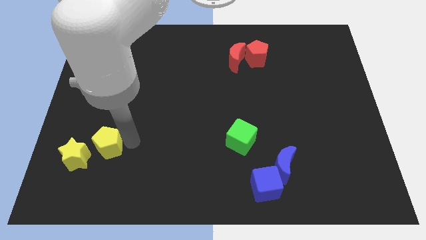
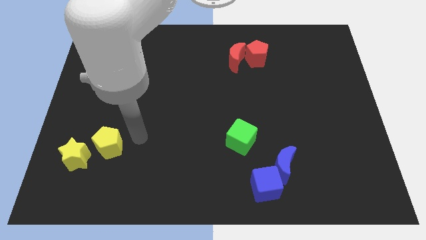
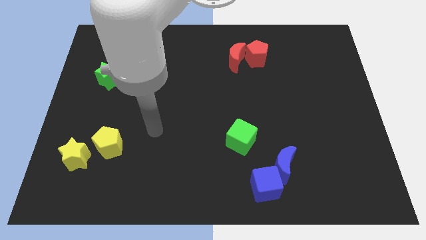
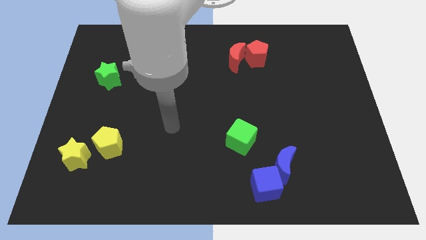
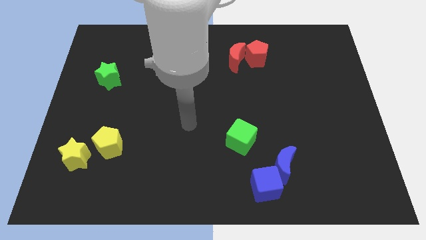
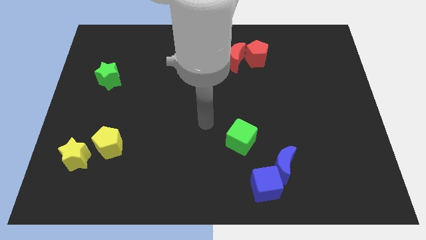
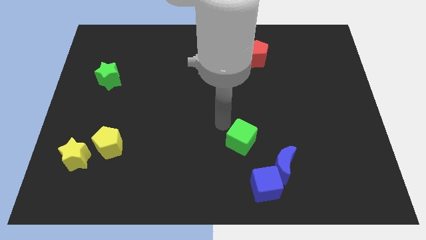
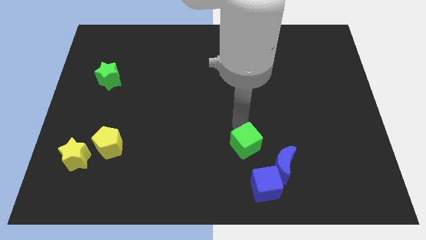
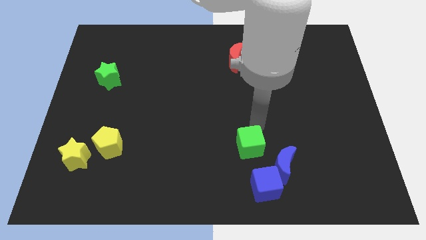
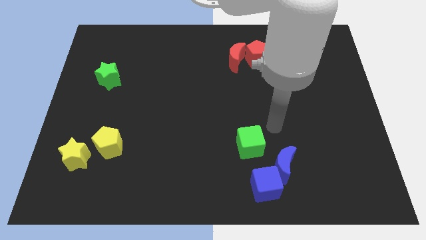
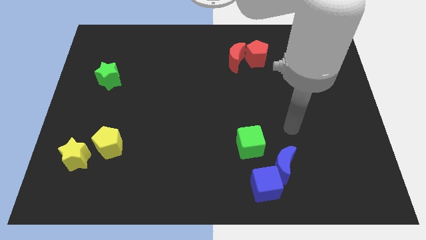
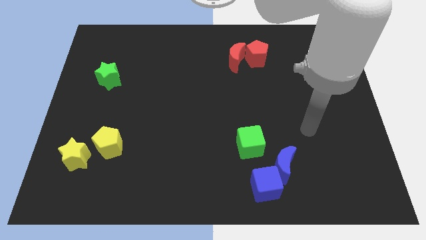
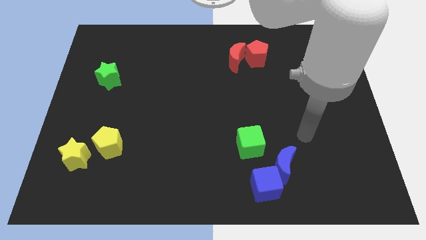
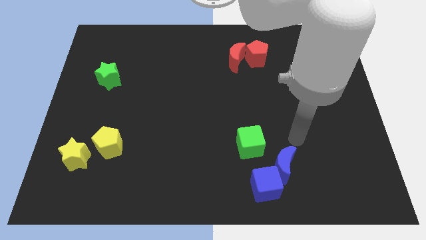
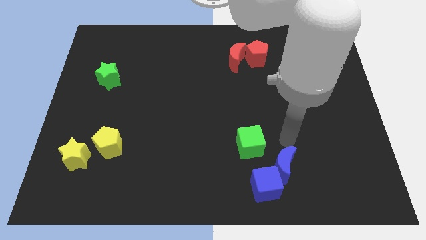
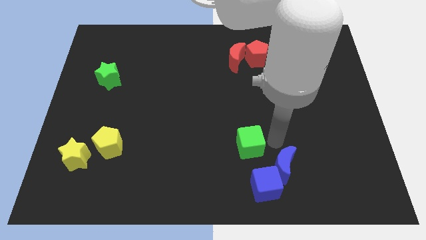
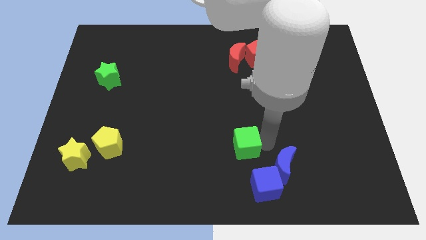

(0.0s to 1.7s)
tap the green cube

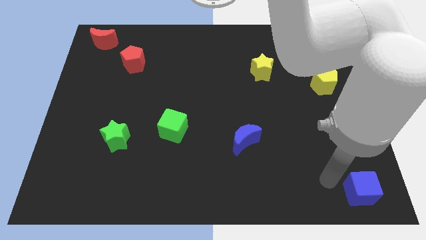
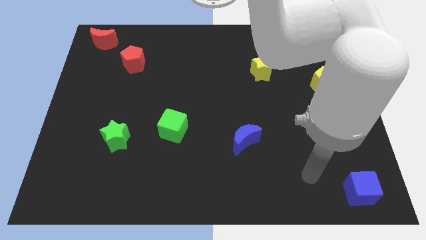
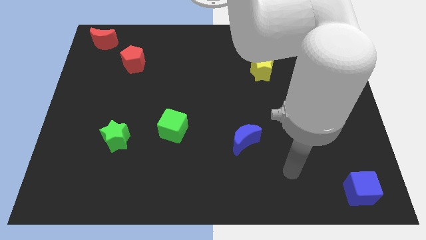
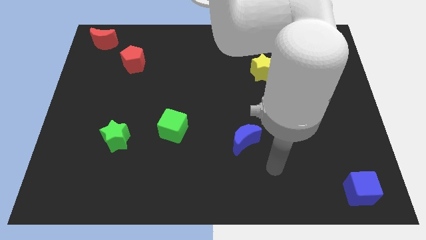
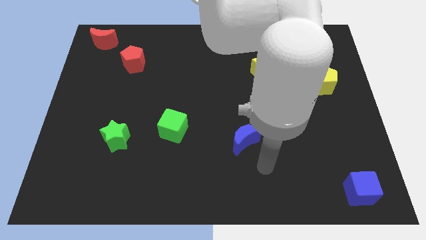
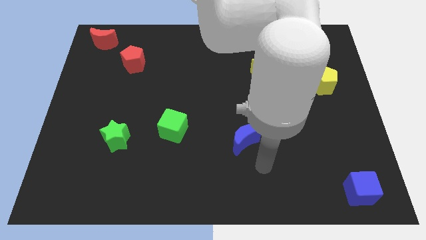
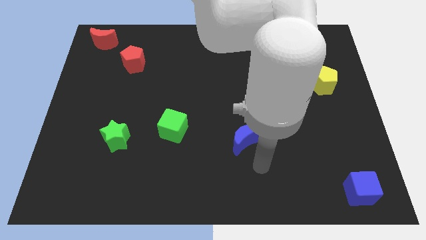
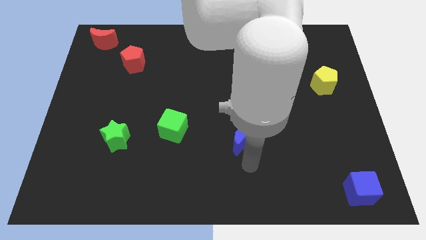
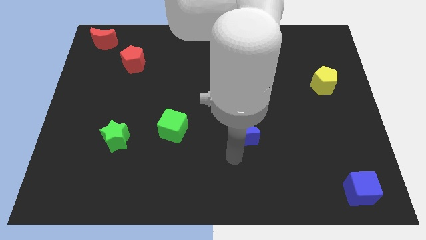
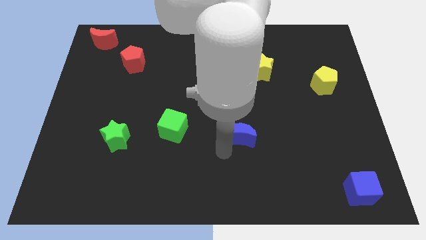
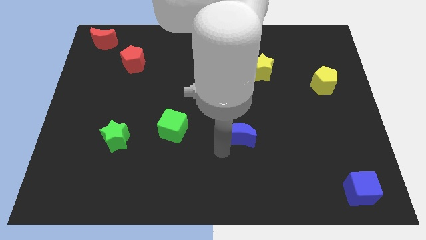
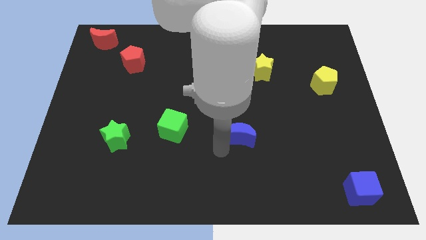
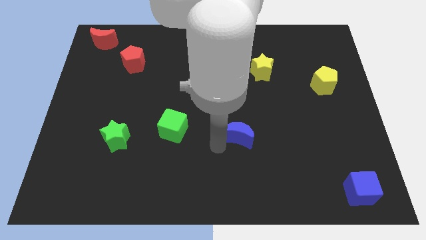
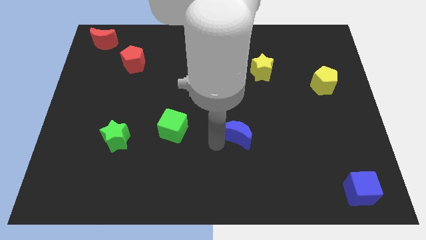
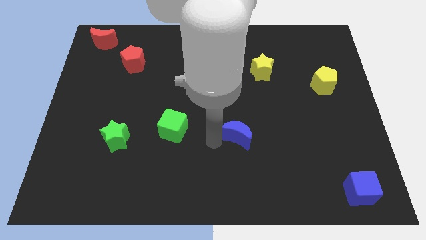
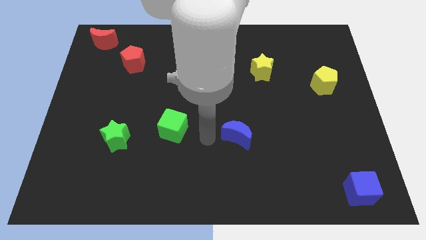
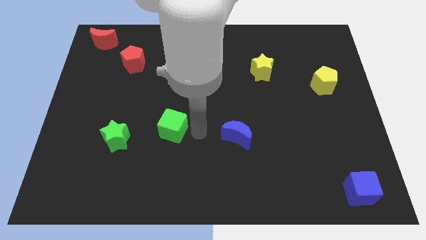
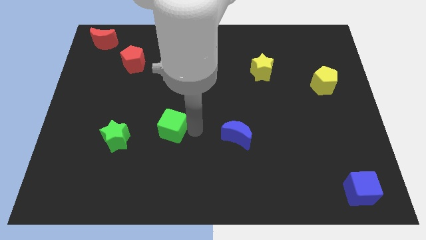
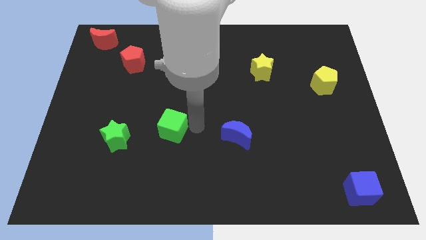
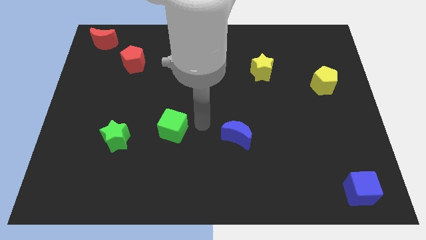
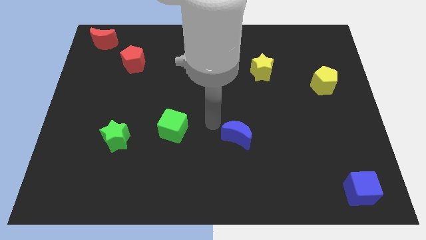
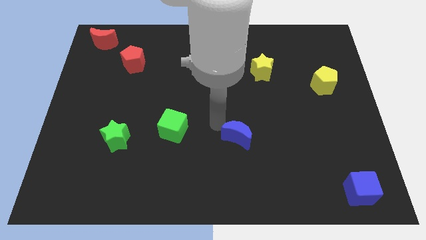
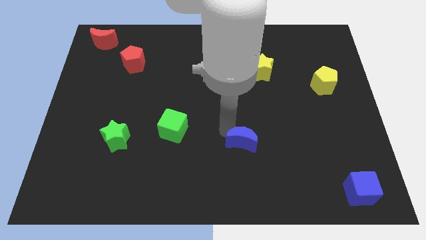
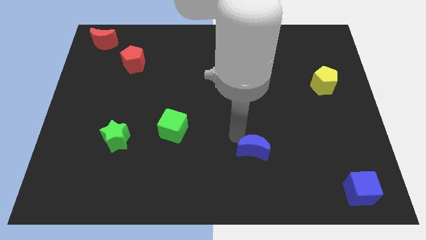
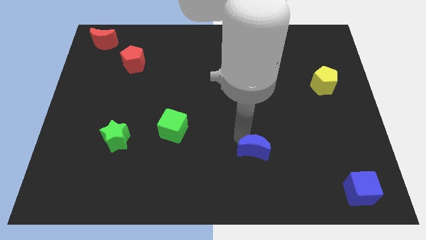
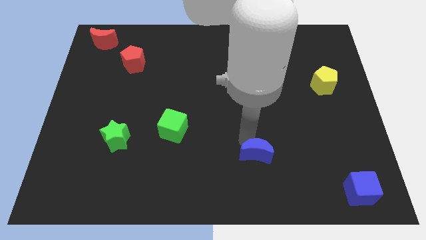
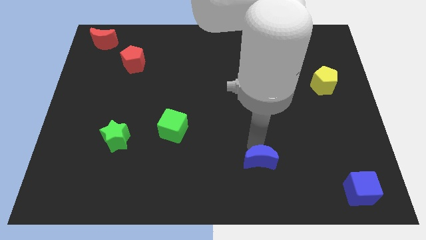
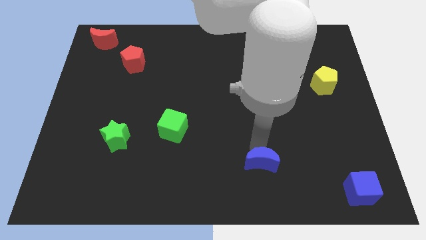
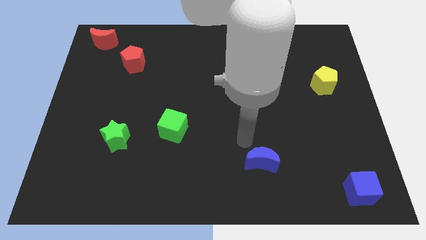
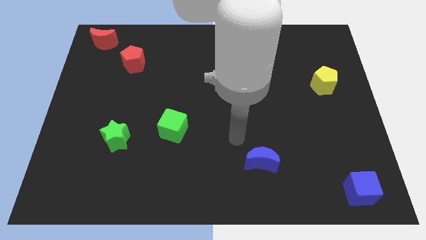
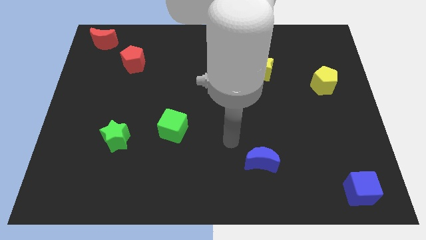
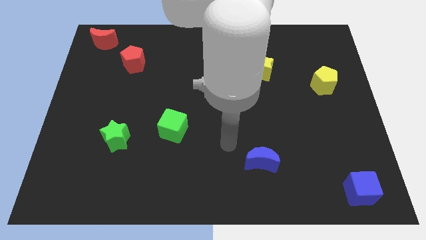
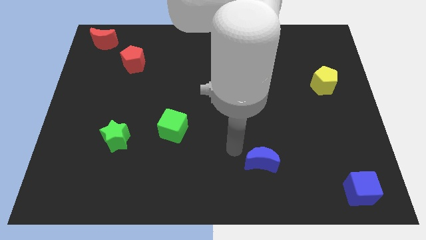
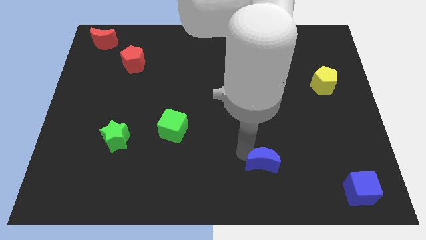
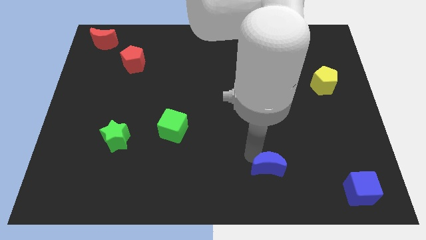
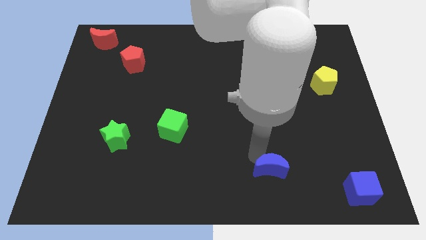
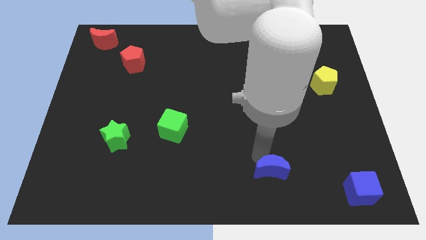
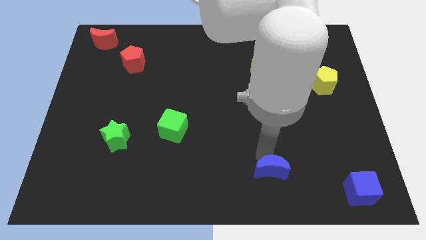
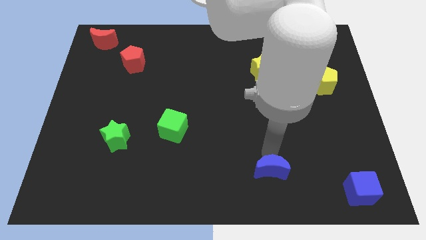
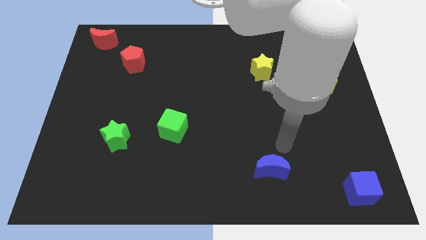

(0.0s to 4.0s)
push the blue crescent to the top left of the blue cube

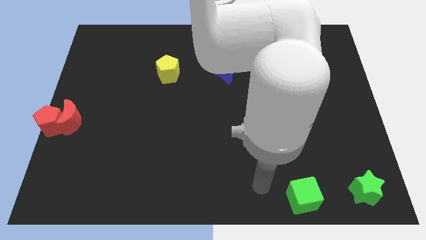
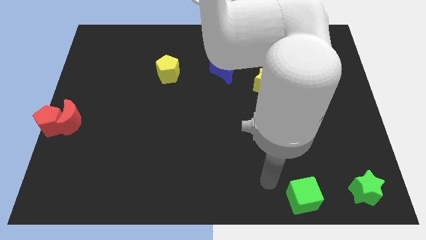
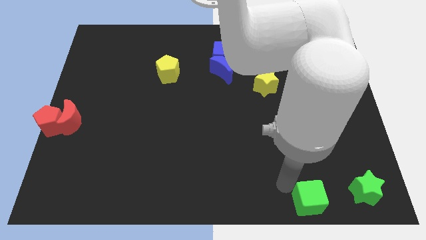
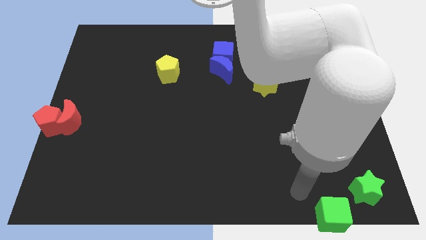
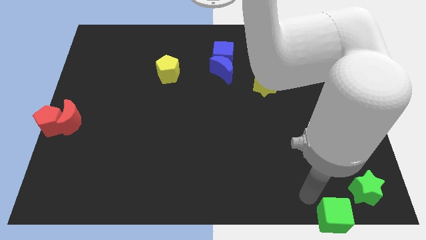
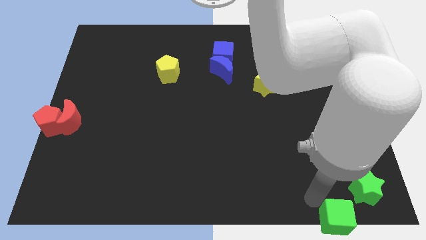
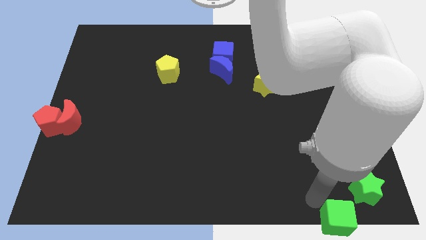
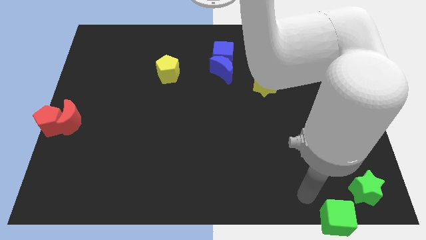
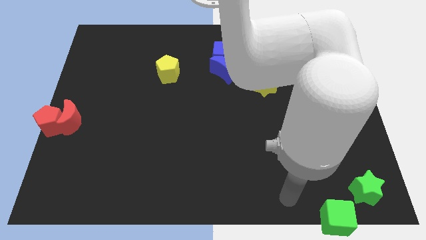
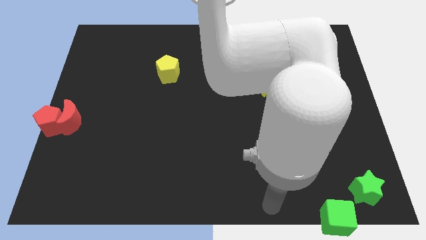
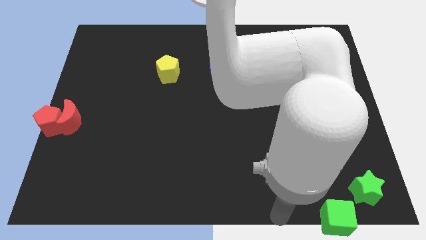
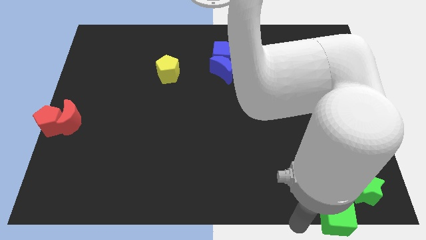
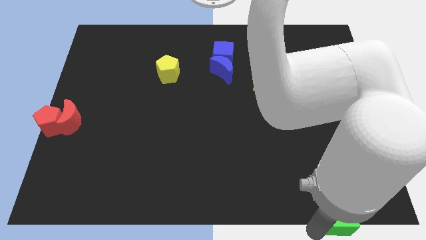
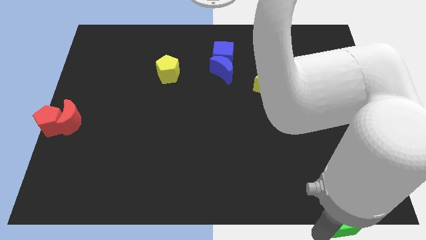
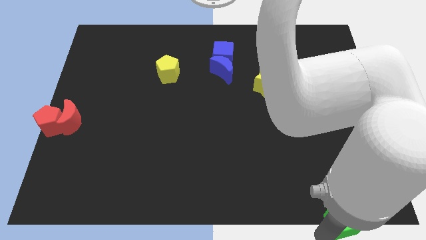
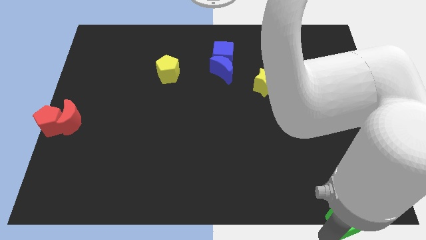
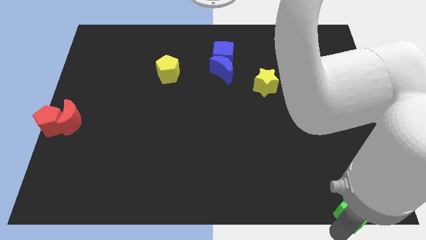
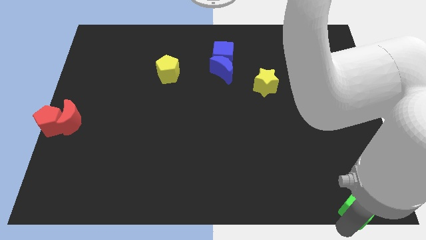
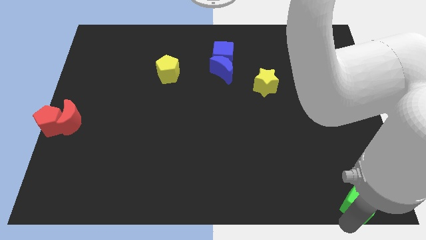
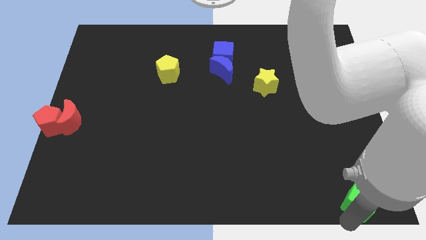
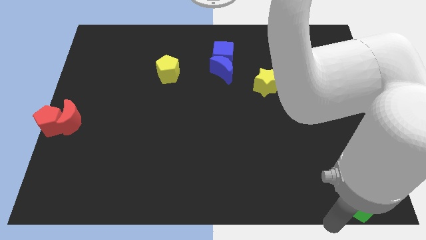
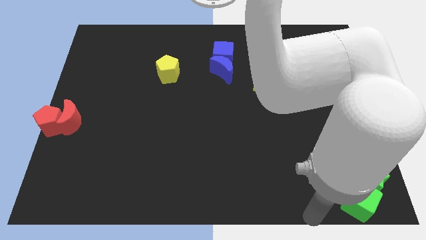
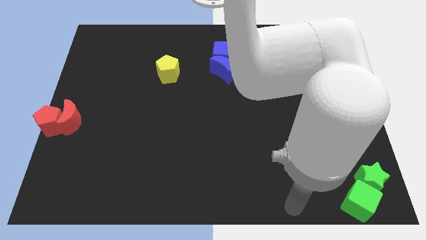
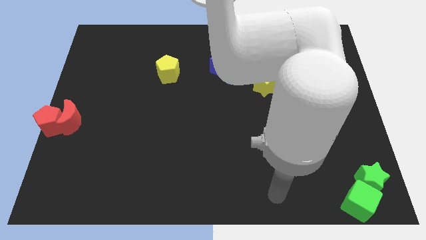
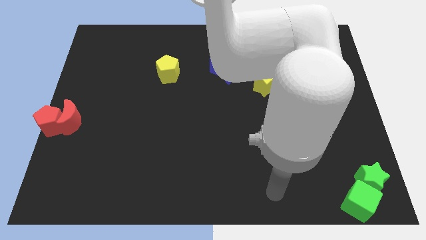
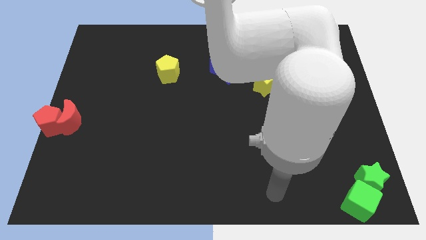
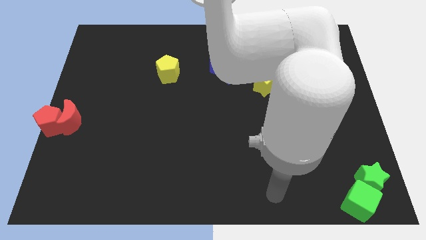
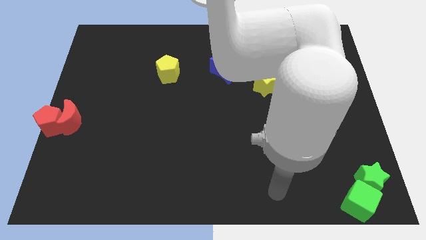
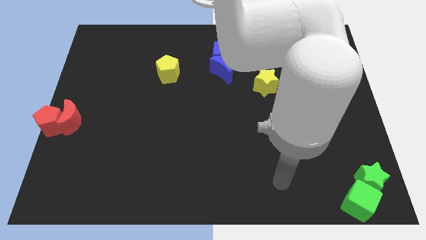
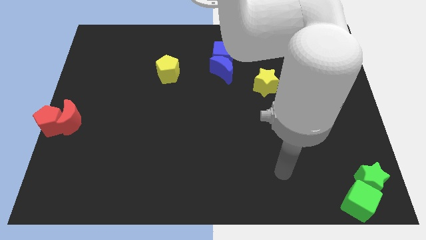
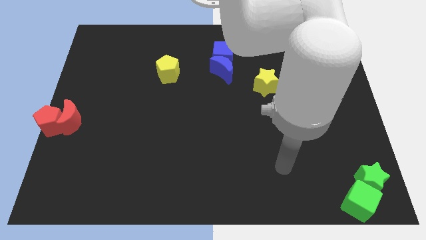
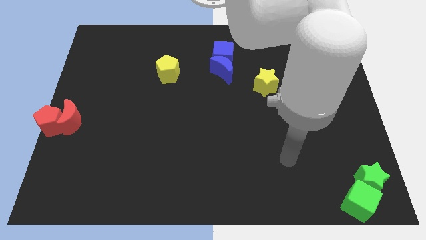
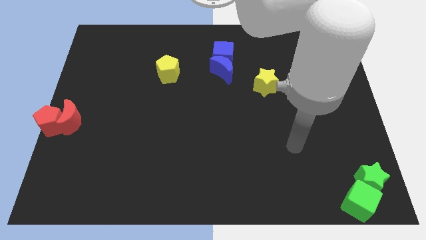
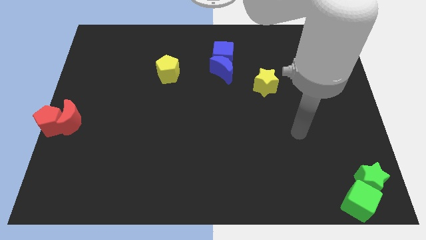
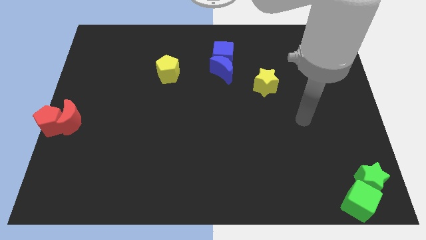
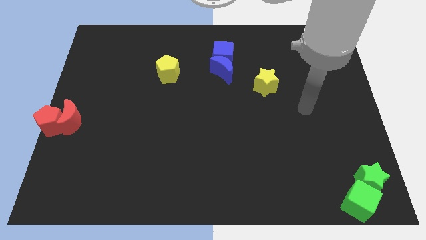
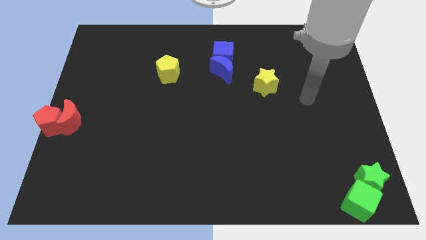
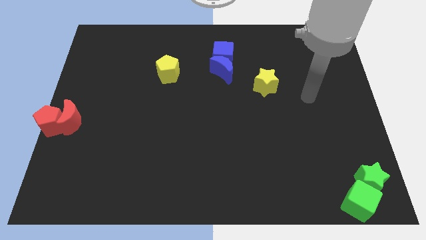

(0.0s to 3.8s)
place the green cube at the bottom right corner
